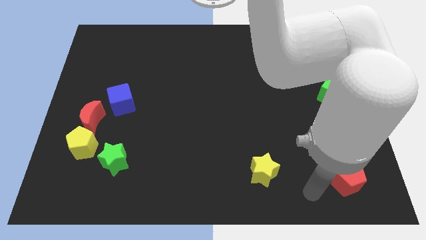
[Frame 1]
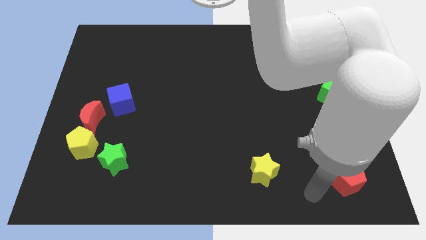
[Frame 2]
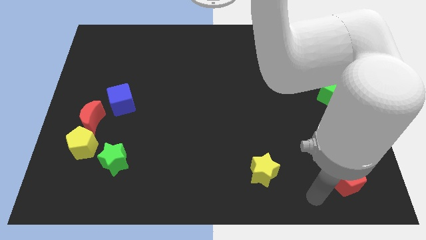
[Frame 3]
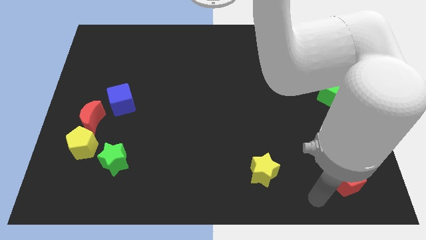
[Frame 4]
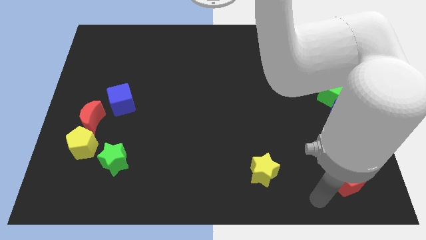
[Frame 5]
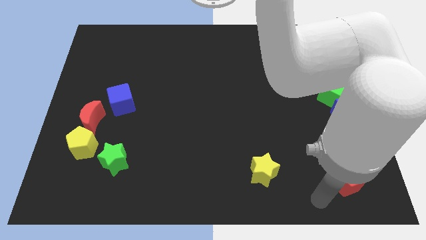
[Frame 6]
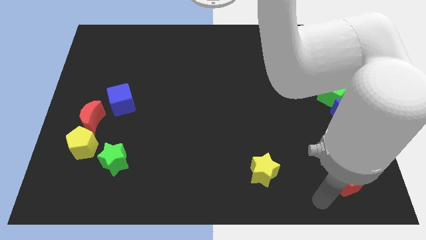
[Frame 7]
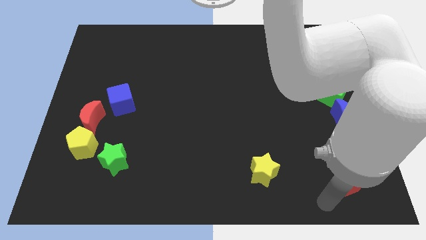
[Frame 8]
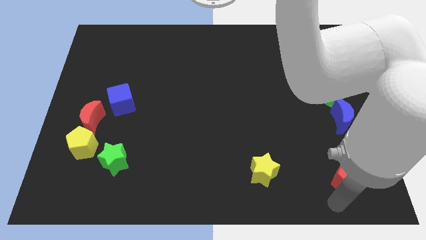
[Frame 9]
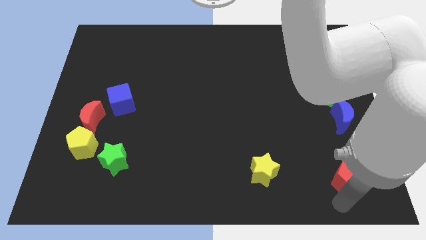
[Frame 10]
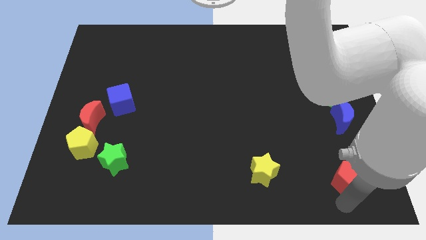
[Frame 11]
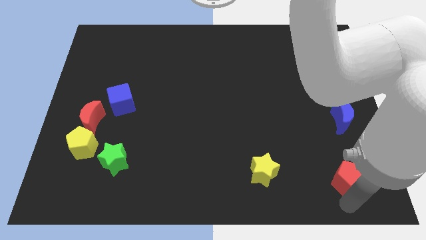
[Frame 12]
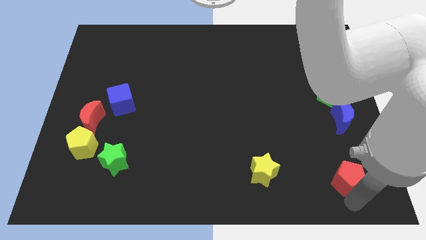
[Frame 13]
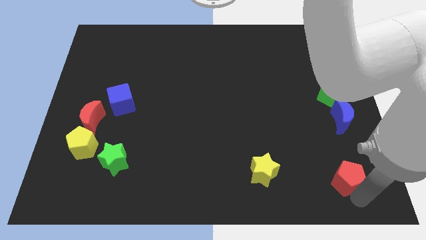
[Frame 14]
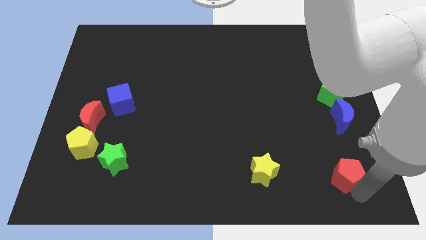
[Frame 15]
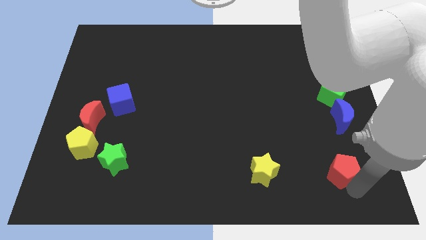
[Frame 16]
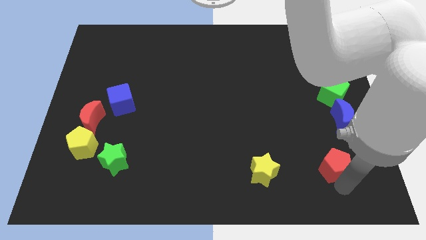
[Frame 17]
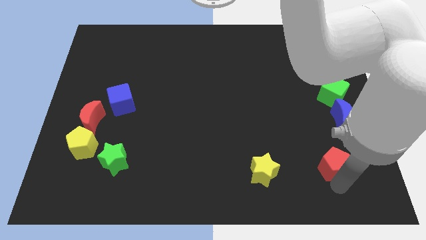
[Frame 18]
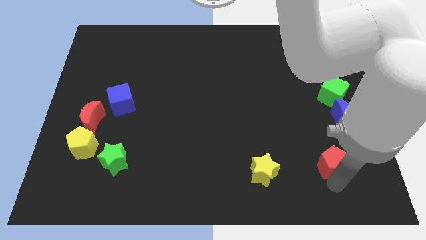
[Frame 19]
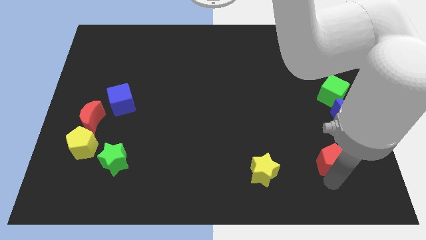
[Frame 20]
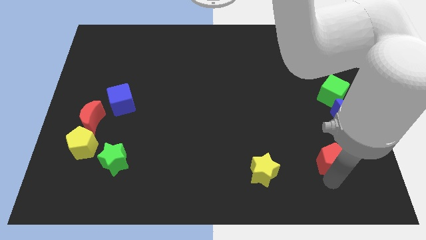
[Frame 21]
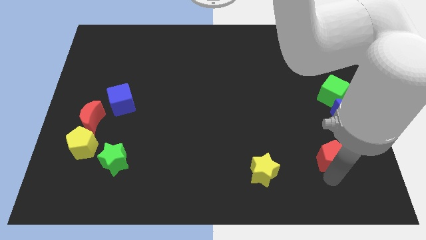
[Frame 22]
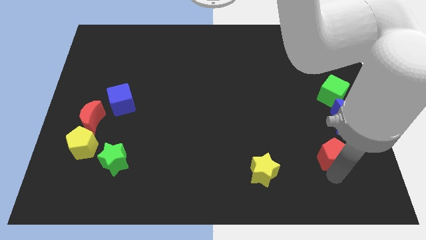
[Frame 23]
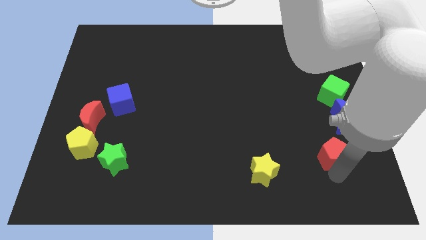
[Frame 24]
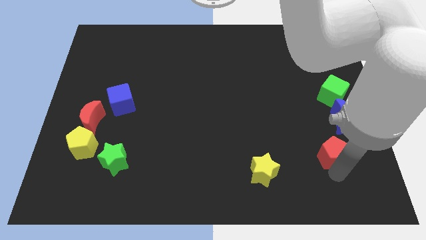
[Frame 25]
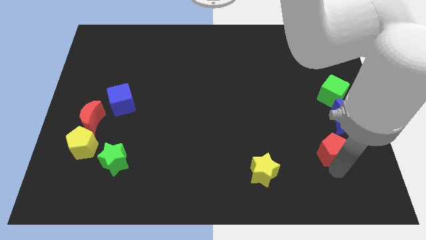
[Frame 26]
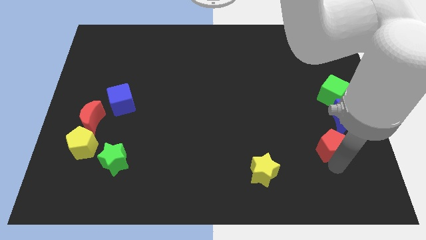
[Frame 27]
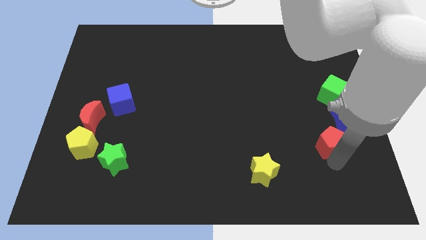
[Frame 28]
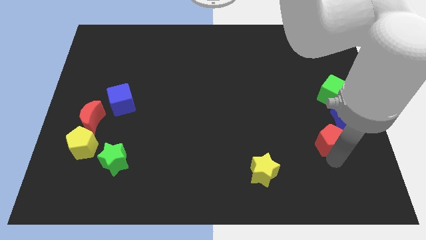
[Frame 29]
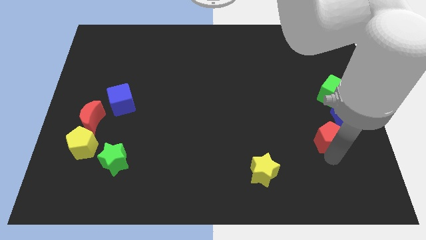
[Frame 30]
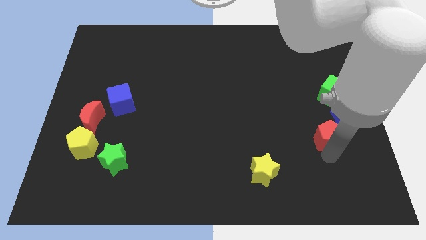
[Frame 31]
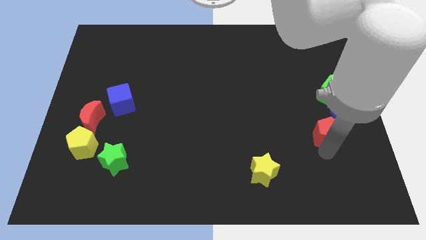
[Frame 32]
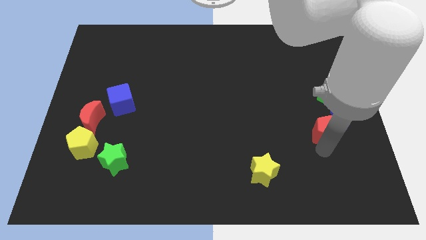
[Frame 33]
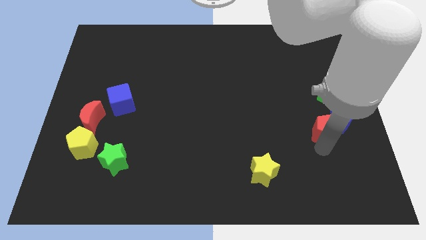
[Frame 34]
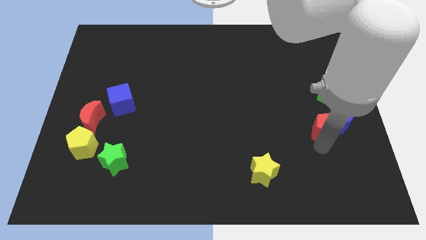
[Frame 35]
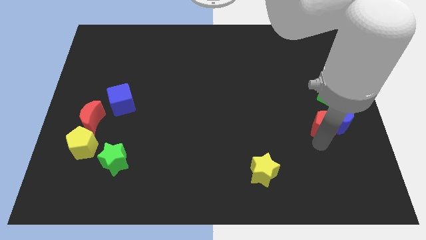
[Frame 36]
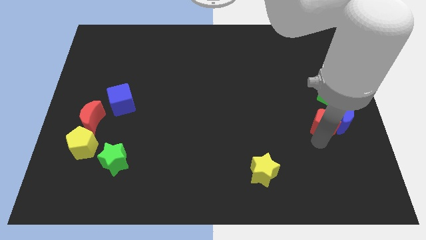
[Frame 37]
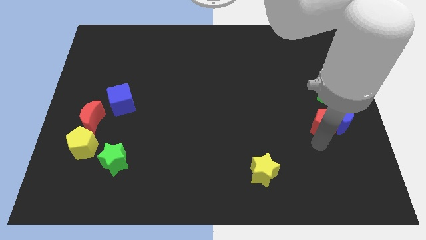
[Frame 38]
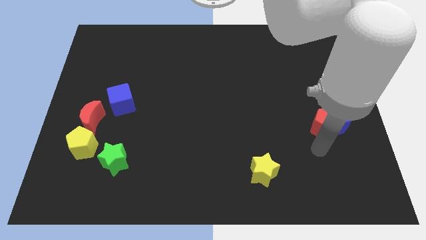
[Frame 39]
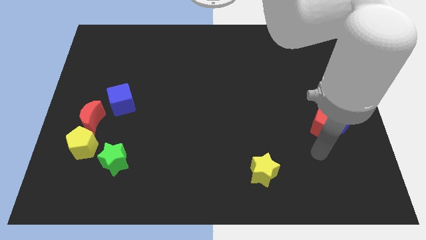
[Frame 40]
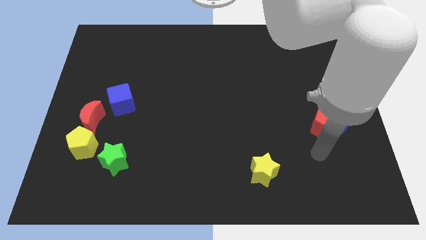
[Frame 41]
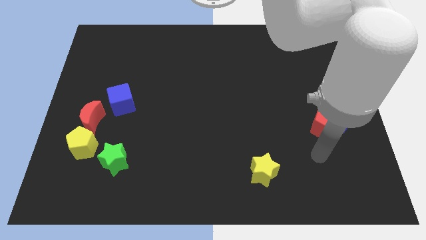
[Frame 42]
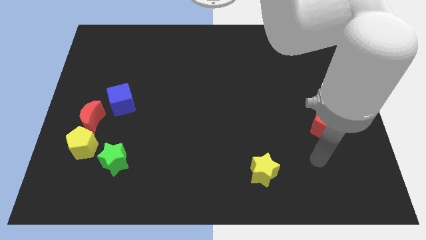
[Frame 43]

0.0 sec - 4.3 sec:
place red pentagon left to the blue moon

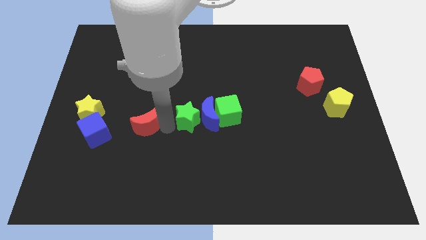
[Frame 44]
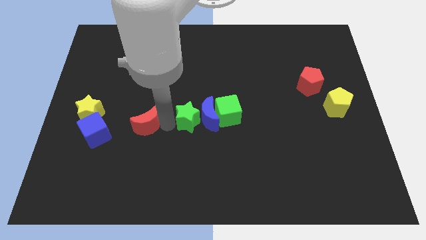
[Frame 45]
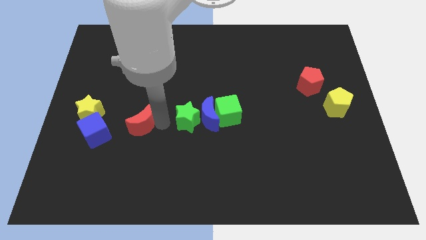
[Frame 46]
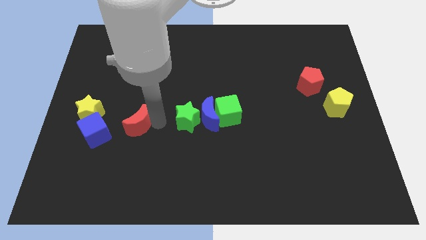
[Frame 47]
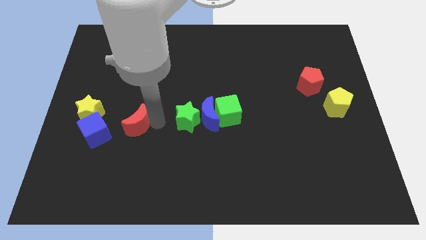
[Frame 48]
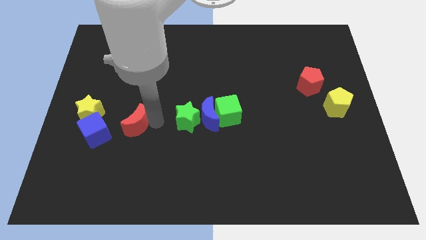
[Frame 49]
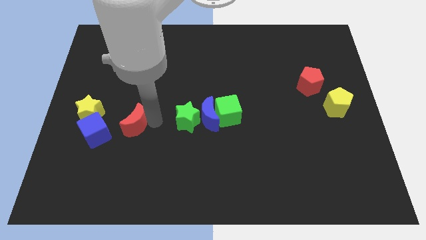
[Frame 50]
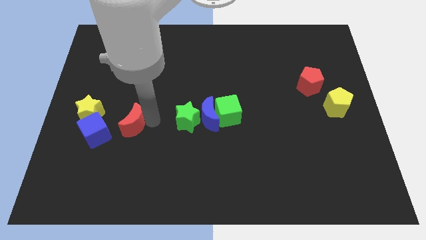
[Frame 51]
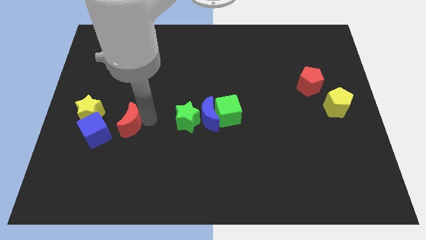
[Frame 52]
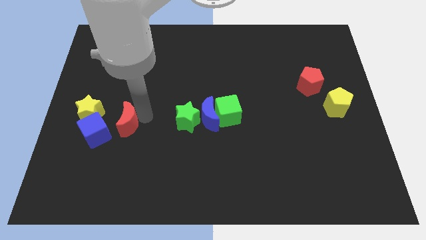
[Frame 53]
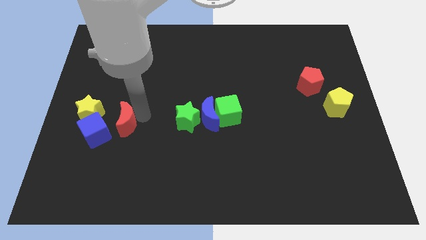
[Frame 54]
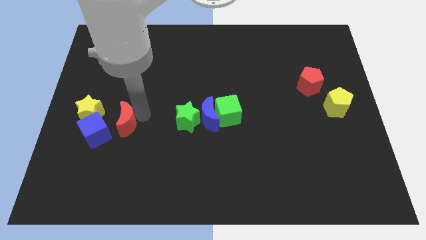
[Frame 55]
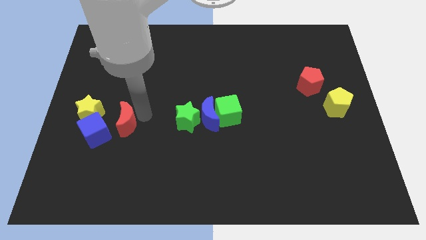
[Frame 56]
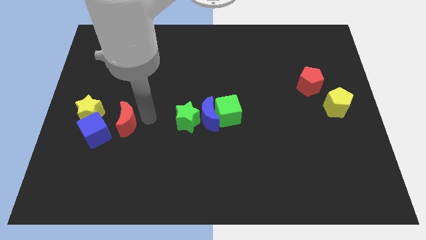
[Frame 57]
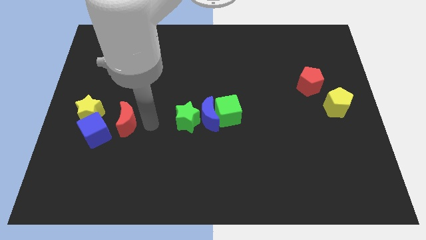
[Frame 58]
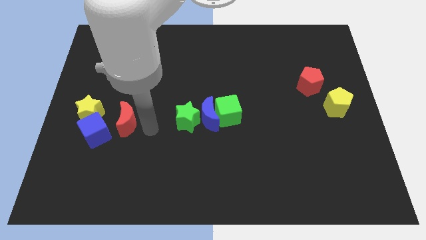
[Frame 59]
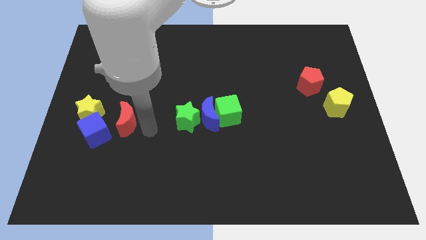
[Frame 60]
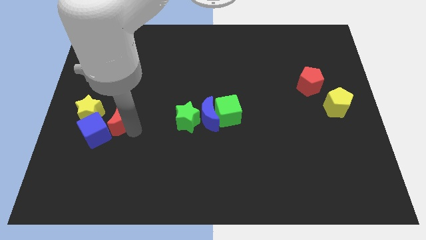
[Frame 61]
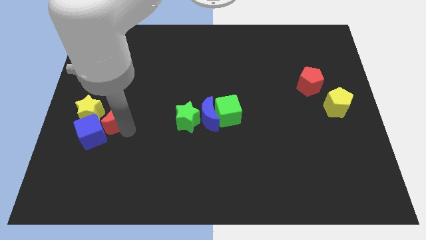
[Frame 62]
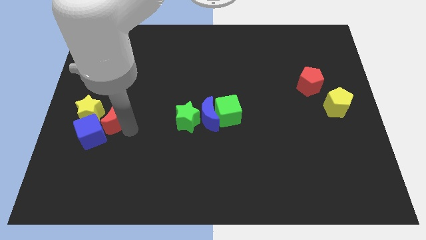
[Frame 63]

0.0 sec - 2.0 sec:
move red moon into blue cube

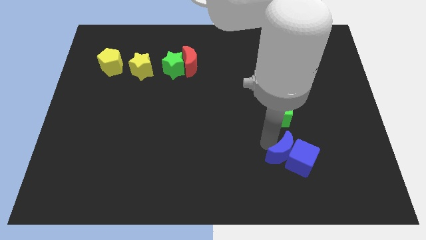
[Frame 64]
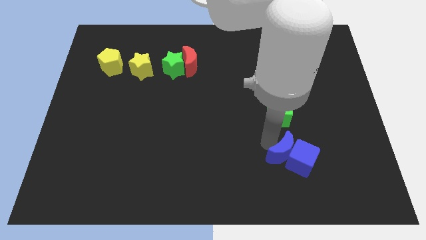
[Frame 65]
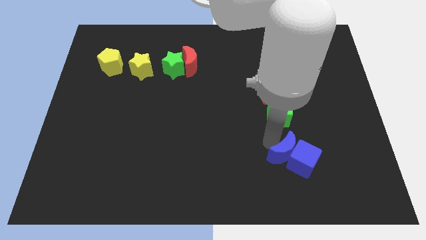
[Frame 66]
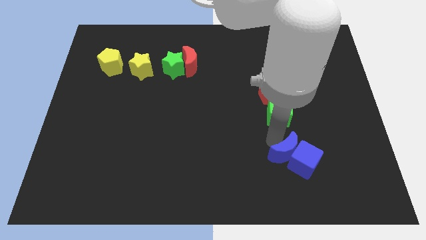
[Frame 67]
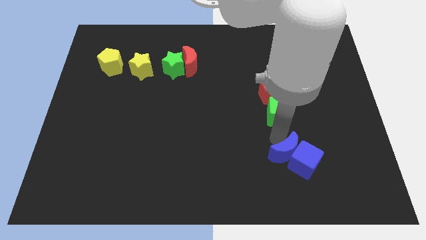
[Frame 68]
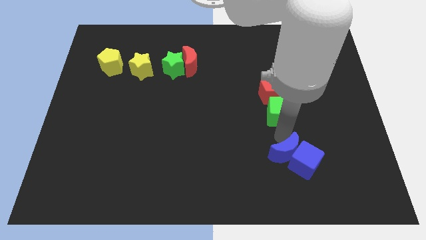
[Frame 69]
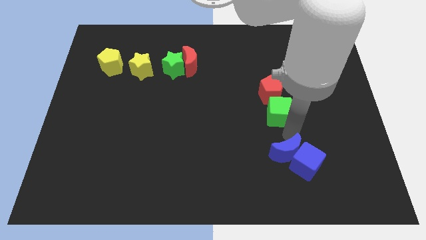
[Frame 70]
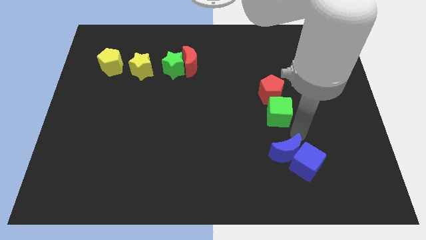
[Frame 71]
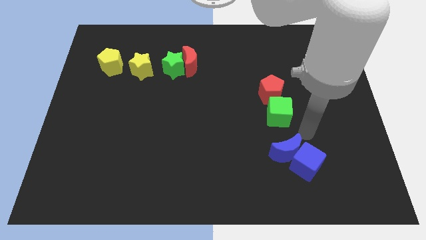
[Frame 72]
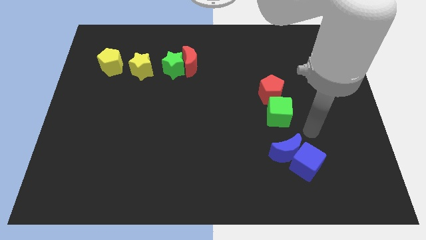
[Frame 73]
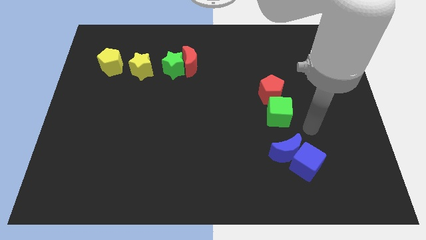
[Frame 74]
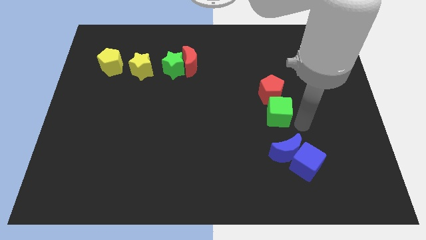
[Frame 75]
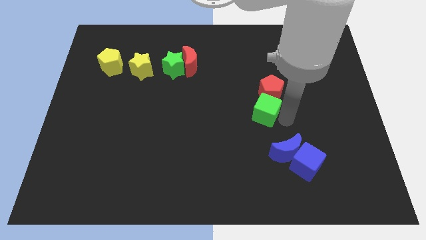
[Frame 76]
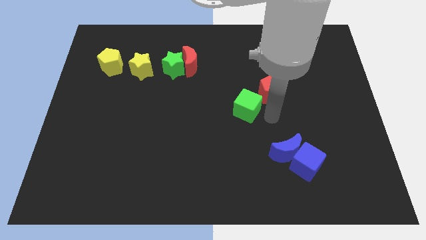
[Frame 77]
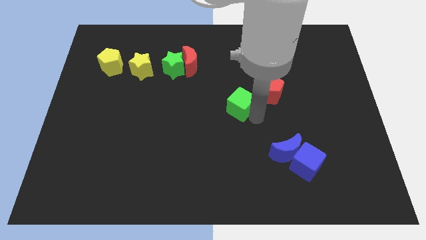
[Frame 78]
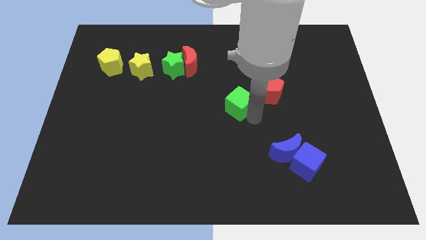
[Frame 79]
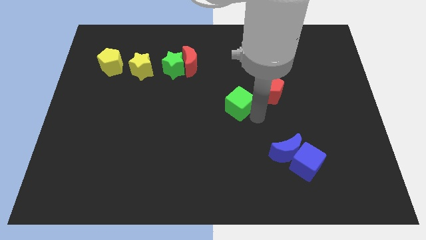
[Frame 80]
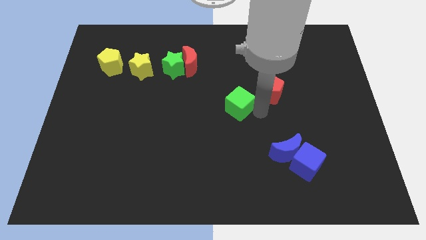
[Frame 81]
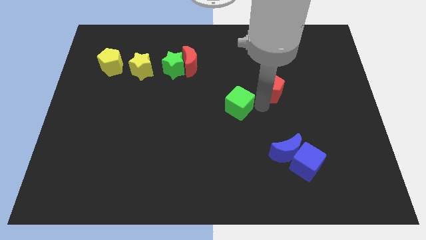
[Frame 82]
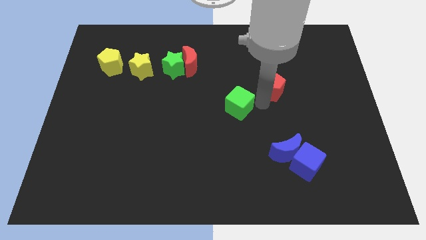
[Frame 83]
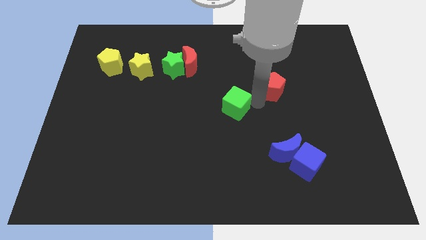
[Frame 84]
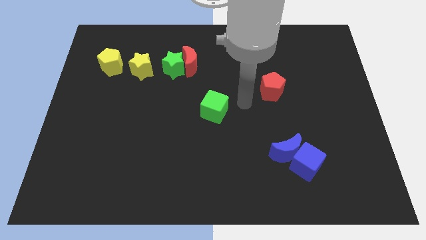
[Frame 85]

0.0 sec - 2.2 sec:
push the green cube to the center of the board

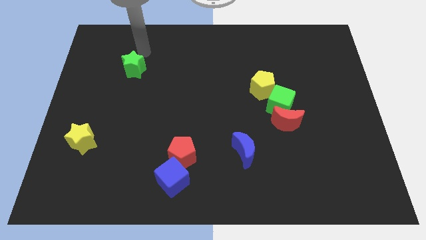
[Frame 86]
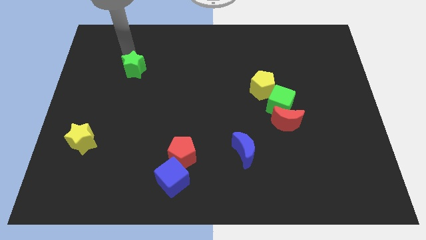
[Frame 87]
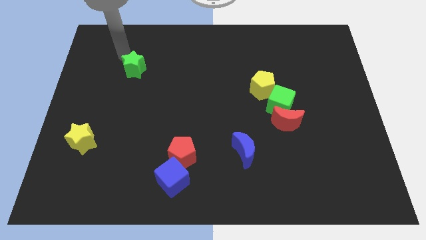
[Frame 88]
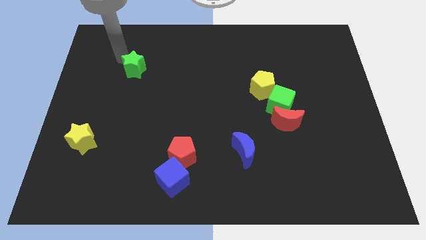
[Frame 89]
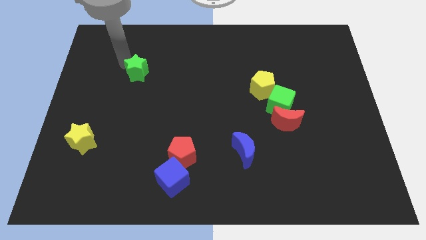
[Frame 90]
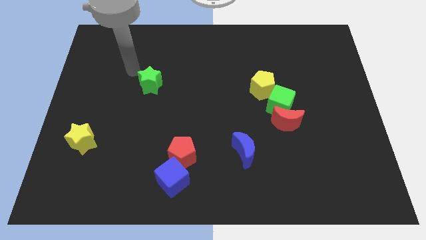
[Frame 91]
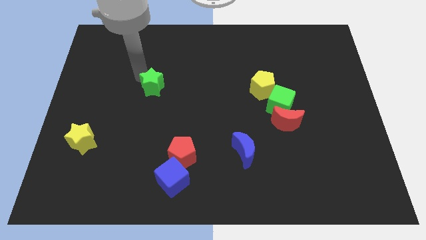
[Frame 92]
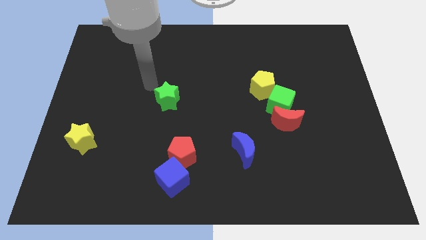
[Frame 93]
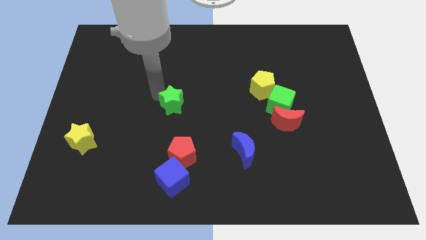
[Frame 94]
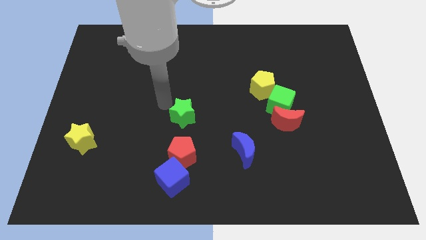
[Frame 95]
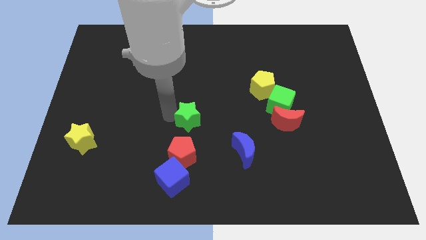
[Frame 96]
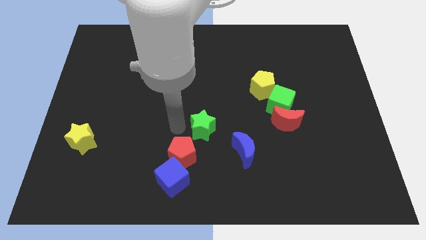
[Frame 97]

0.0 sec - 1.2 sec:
push green star towards red pentagon
